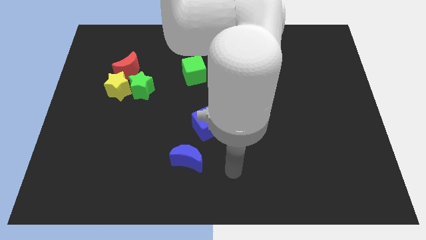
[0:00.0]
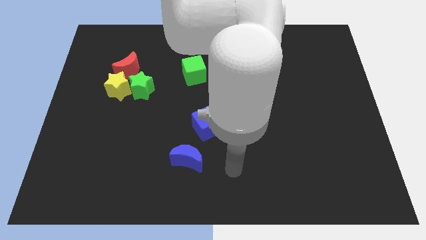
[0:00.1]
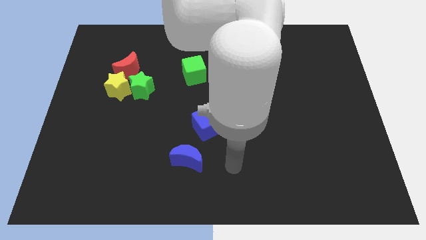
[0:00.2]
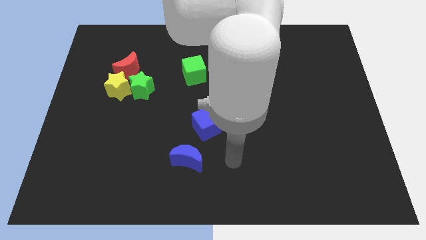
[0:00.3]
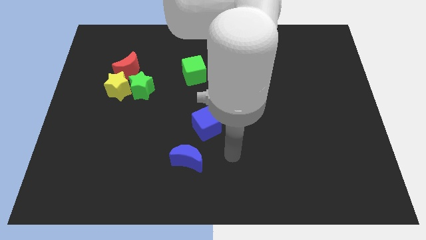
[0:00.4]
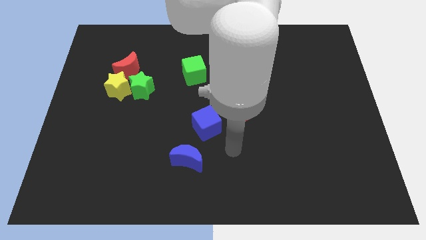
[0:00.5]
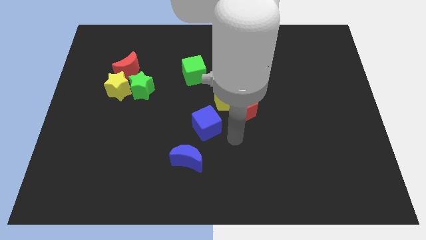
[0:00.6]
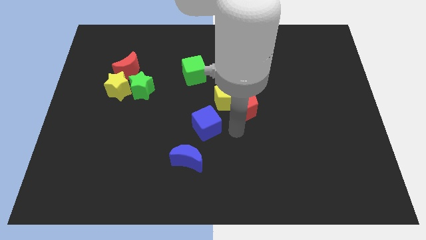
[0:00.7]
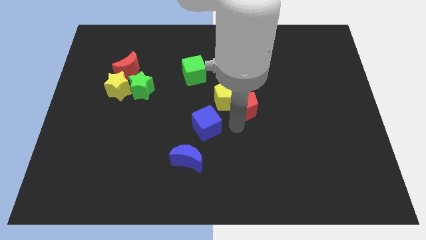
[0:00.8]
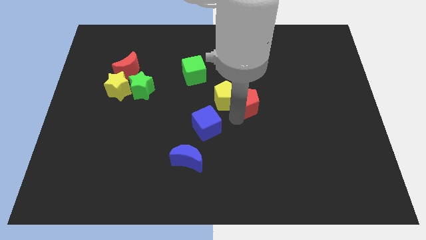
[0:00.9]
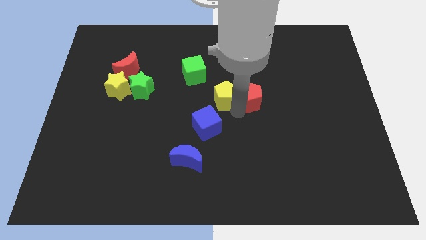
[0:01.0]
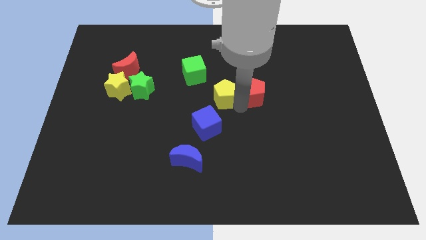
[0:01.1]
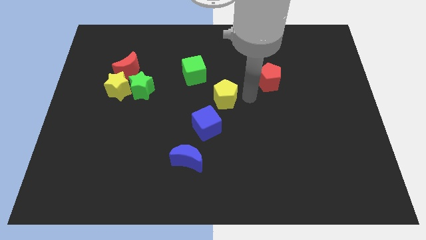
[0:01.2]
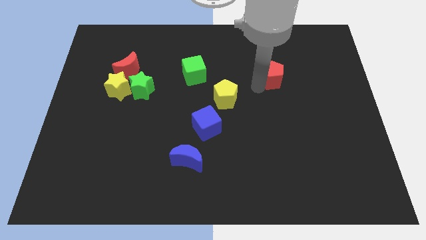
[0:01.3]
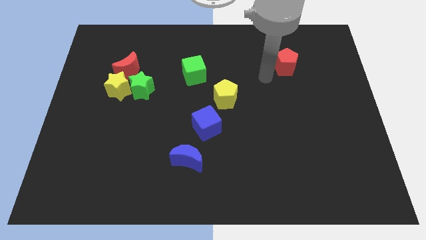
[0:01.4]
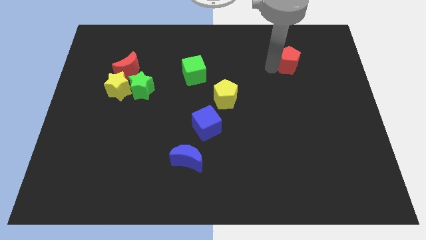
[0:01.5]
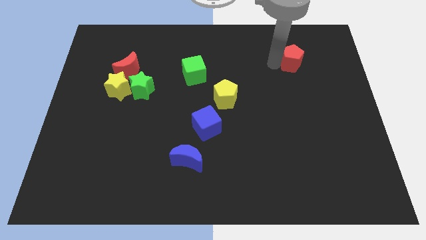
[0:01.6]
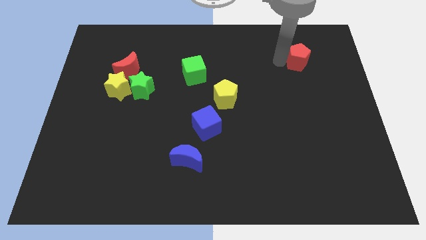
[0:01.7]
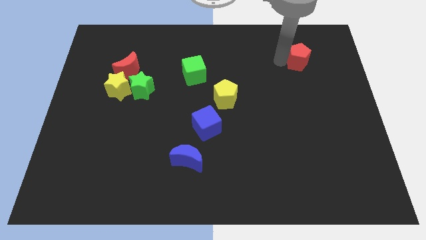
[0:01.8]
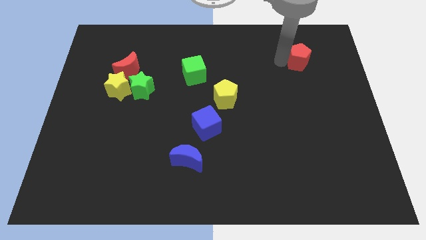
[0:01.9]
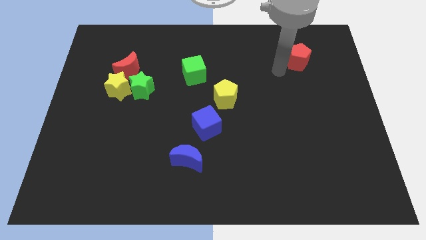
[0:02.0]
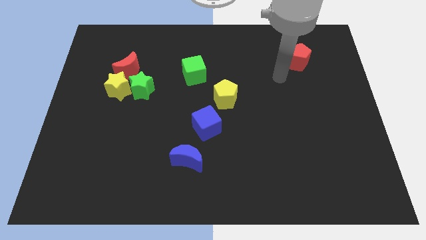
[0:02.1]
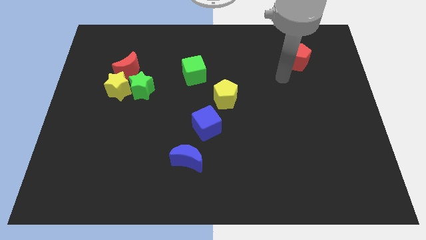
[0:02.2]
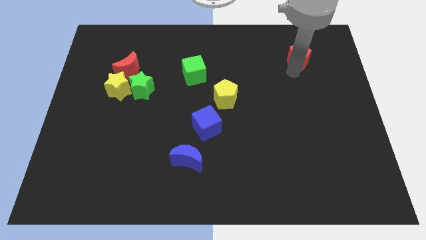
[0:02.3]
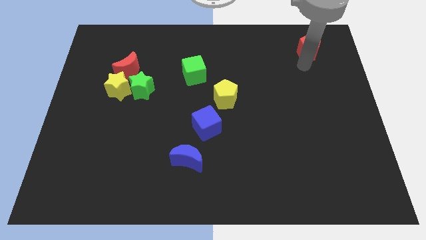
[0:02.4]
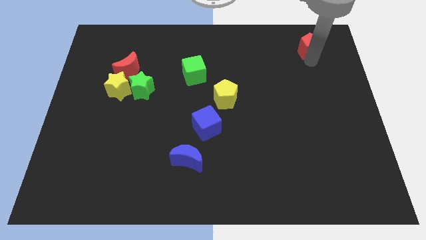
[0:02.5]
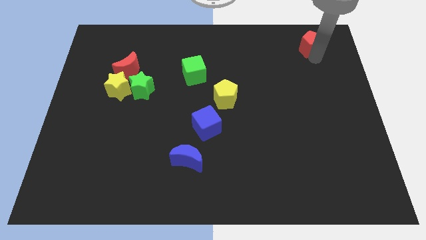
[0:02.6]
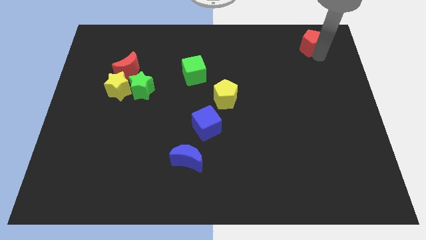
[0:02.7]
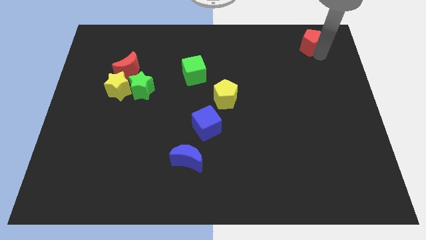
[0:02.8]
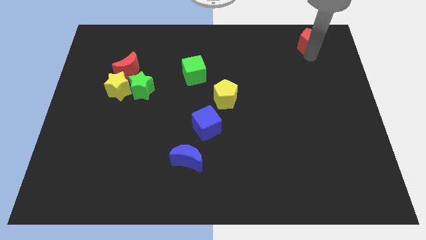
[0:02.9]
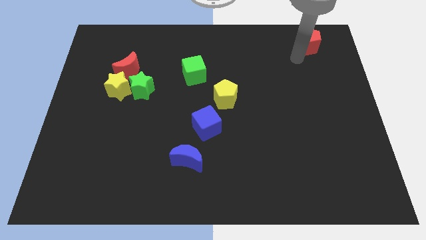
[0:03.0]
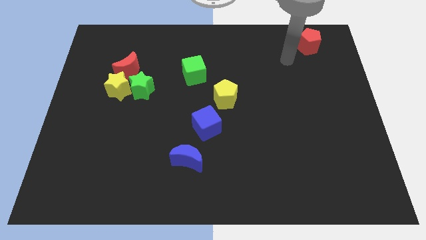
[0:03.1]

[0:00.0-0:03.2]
separate the red pentagon from the yellow pentagon

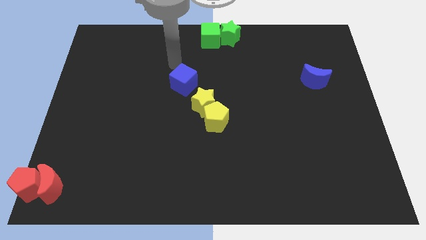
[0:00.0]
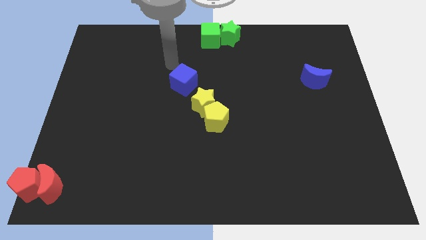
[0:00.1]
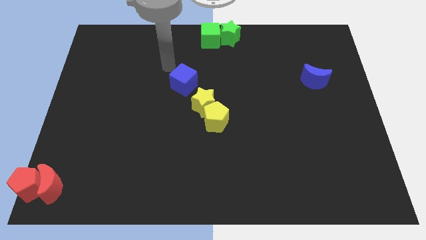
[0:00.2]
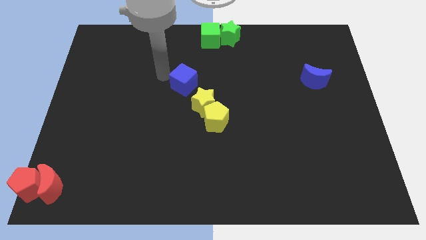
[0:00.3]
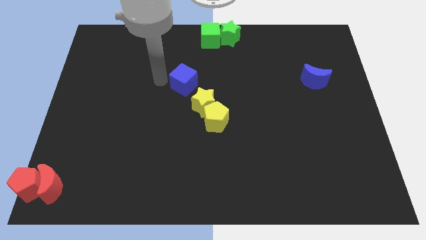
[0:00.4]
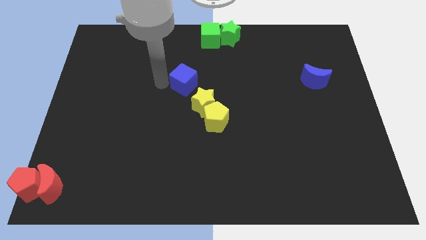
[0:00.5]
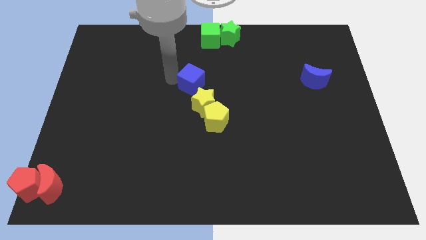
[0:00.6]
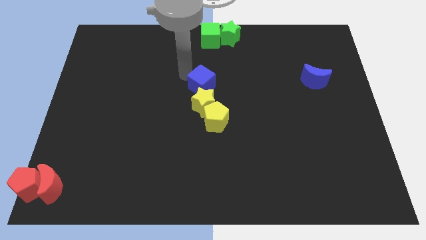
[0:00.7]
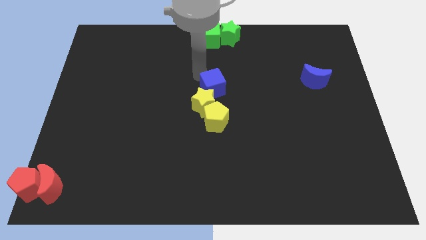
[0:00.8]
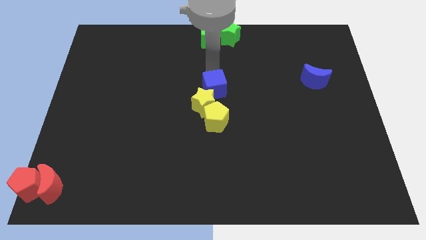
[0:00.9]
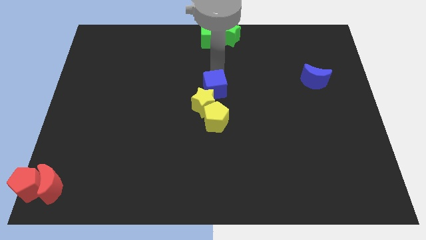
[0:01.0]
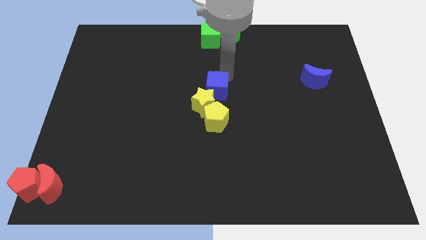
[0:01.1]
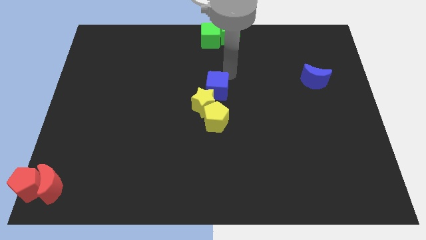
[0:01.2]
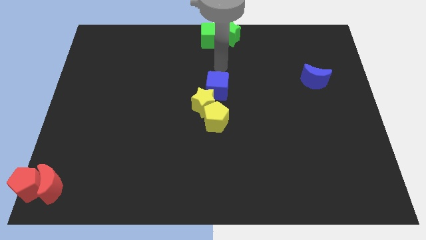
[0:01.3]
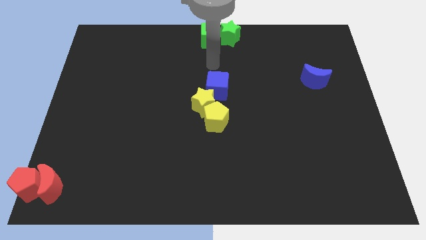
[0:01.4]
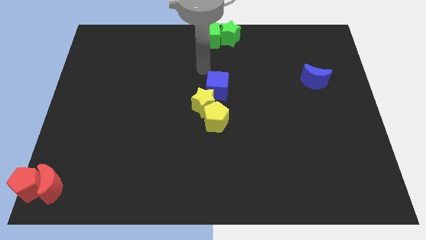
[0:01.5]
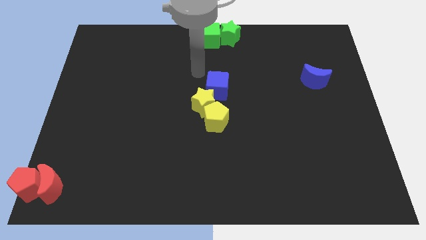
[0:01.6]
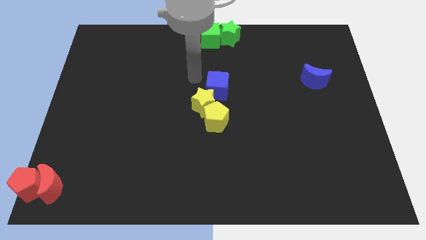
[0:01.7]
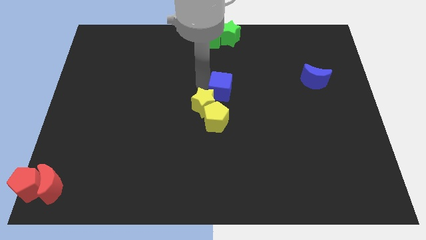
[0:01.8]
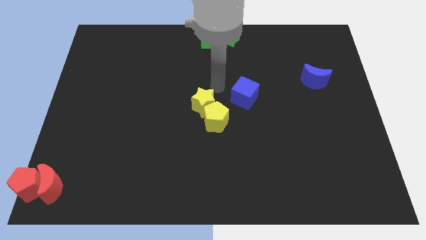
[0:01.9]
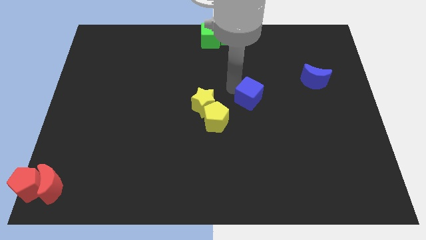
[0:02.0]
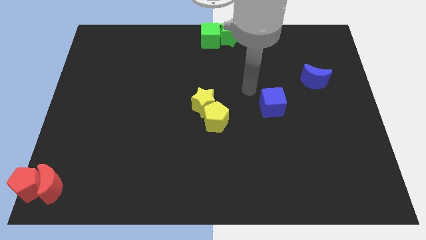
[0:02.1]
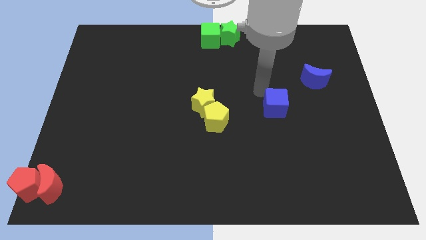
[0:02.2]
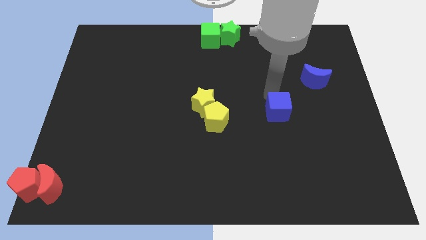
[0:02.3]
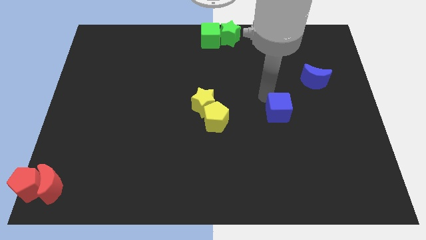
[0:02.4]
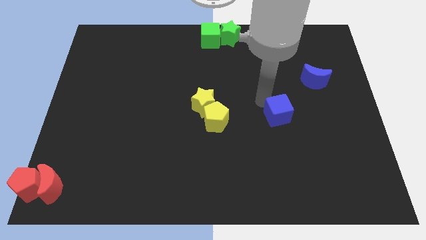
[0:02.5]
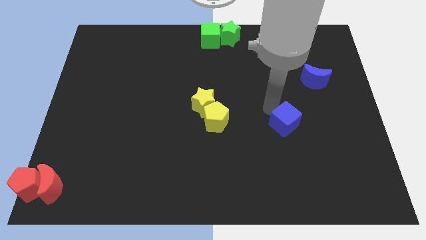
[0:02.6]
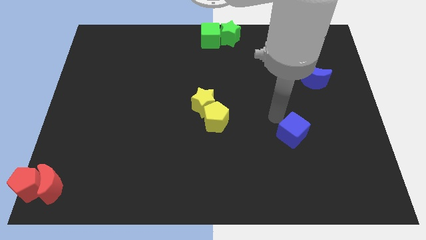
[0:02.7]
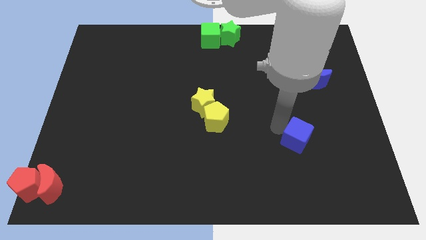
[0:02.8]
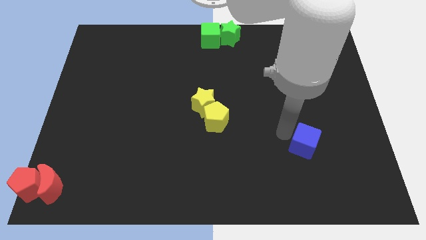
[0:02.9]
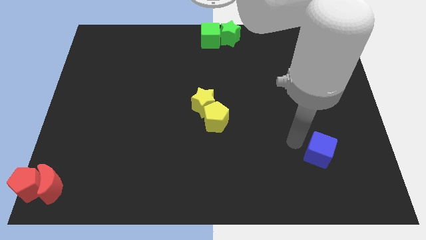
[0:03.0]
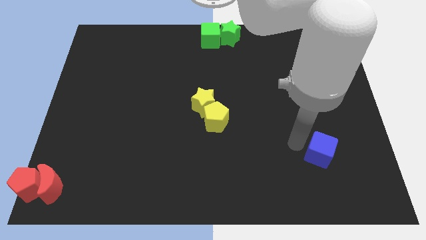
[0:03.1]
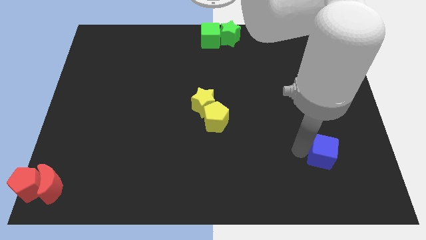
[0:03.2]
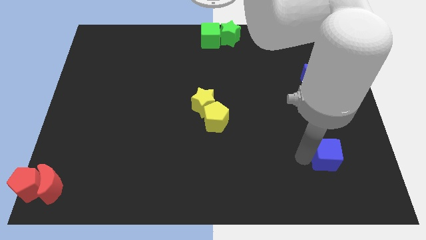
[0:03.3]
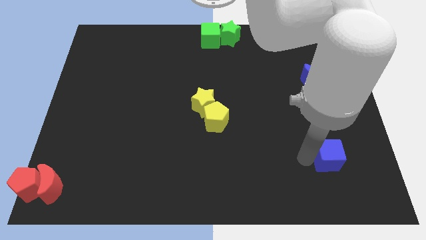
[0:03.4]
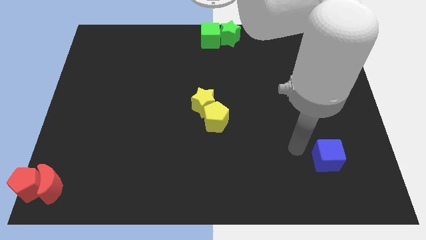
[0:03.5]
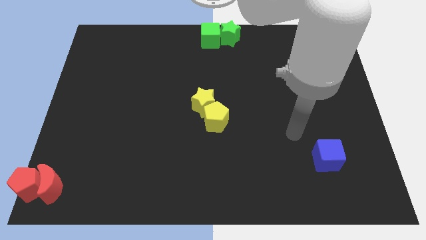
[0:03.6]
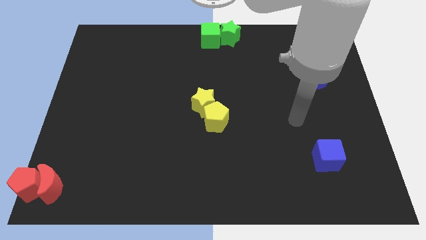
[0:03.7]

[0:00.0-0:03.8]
push the blue cube to the vertical bottom side of the blue moon

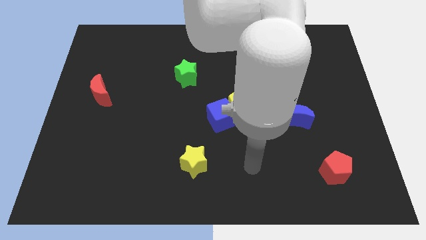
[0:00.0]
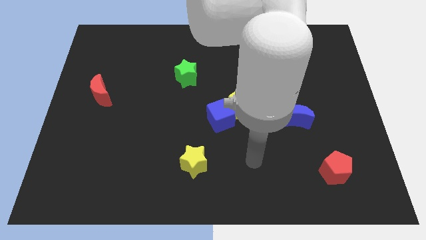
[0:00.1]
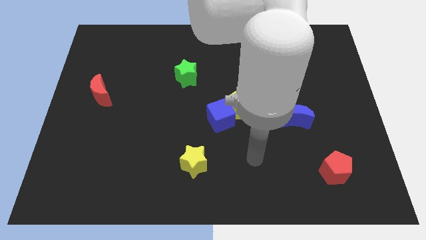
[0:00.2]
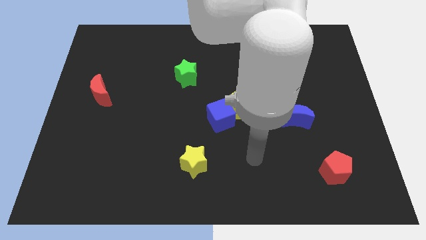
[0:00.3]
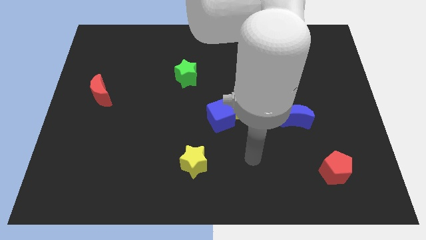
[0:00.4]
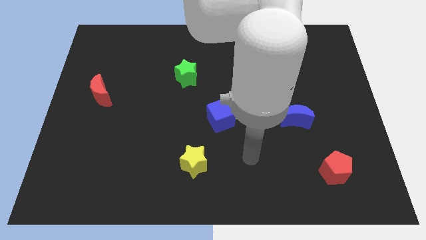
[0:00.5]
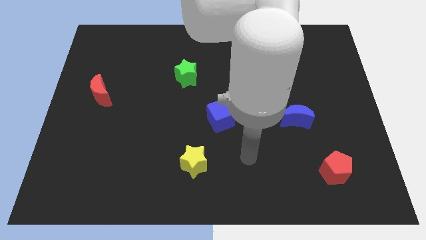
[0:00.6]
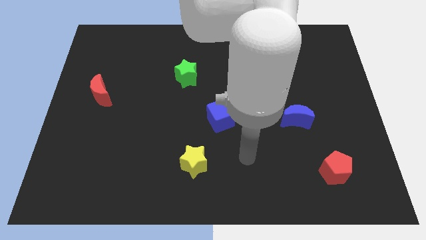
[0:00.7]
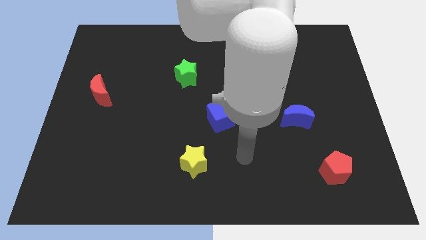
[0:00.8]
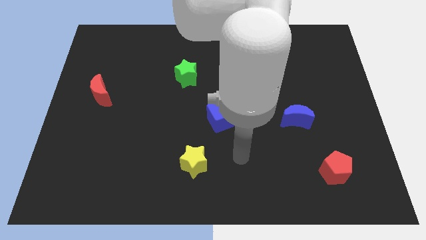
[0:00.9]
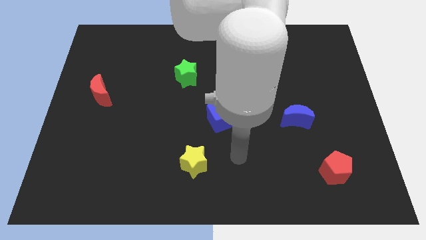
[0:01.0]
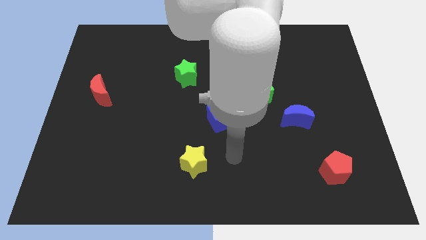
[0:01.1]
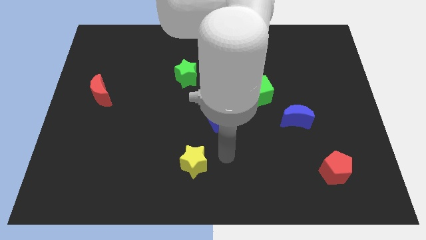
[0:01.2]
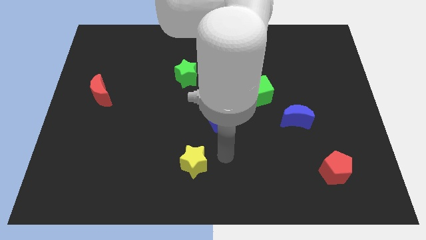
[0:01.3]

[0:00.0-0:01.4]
move your arm below the blue cube

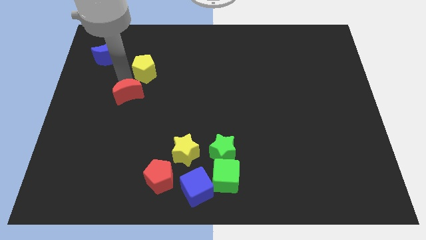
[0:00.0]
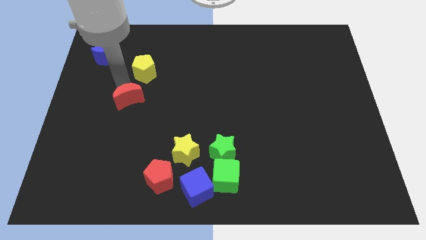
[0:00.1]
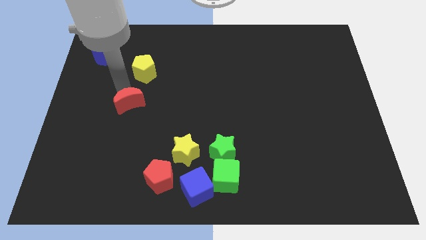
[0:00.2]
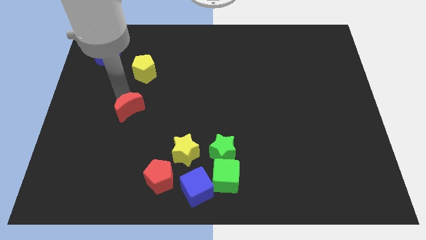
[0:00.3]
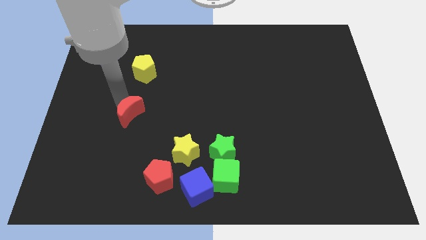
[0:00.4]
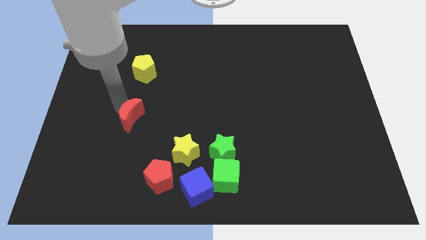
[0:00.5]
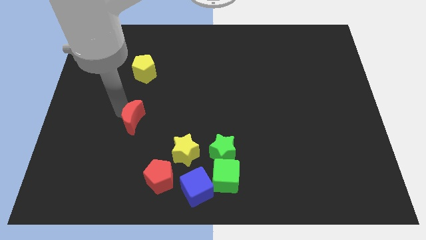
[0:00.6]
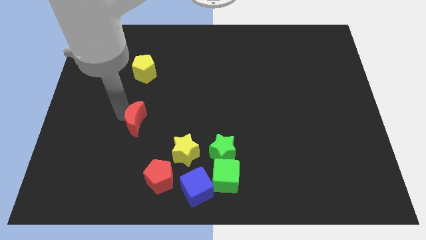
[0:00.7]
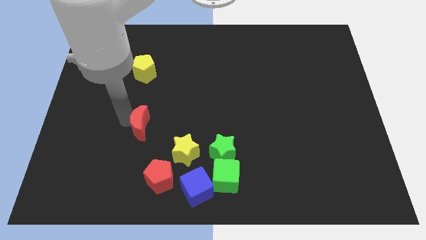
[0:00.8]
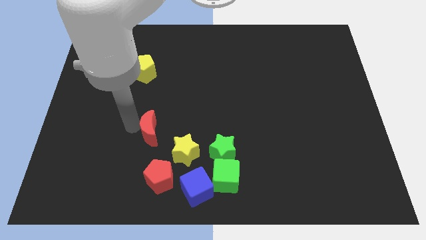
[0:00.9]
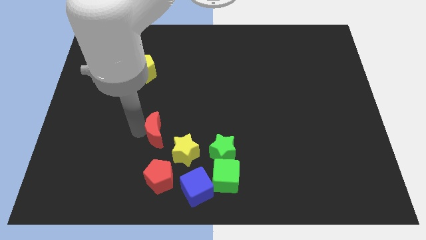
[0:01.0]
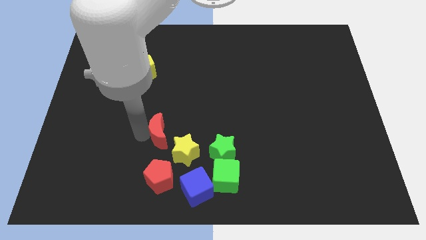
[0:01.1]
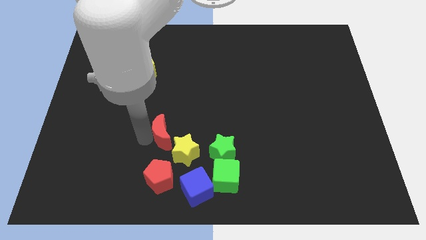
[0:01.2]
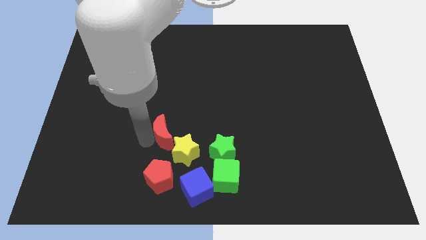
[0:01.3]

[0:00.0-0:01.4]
put the red moon diagonally top left of yellow star
